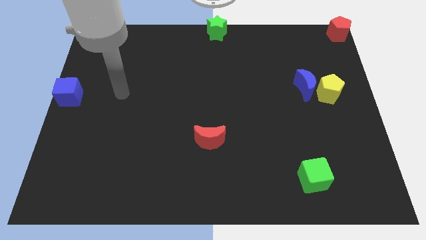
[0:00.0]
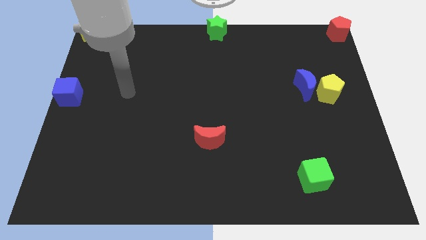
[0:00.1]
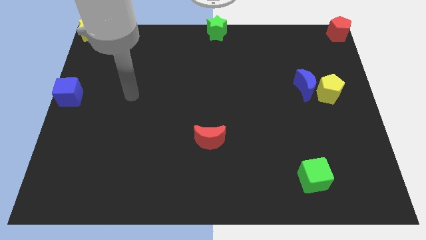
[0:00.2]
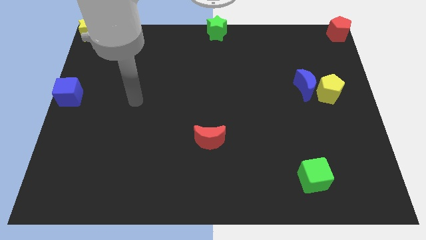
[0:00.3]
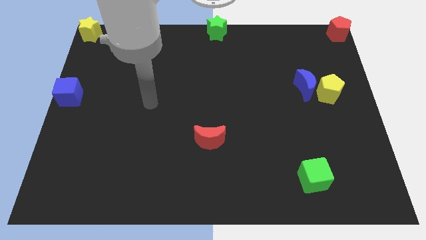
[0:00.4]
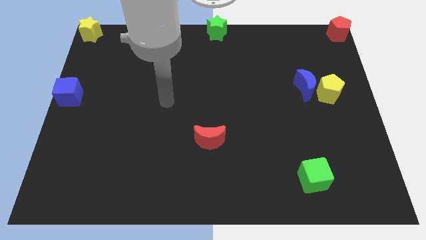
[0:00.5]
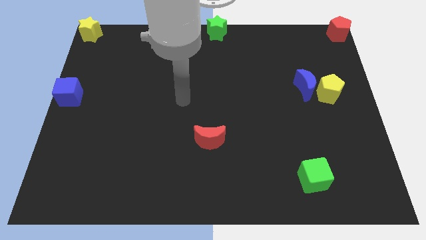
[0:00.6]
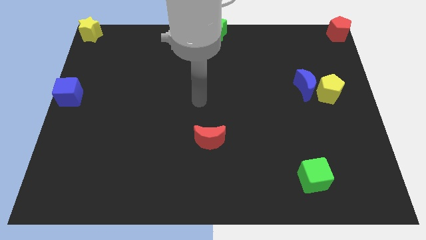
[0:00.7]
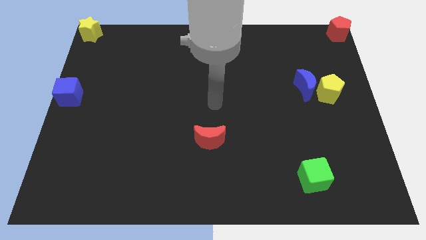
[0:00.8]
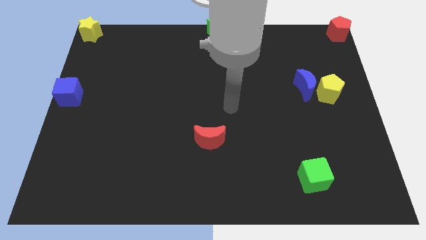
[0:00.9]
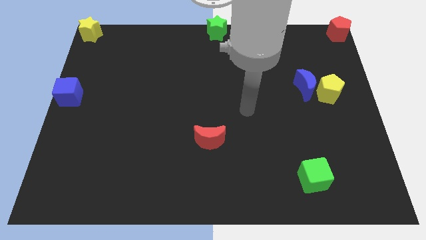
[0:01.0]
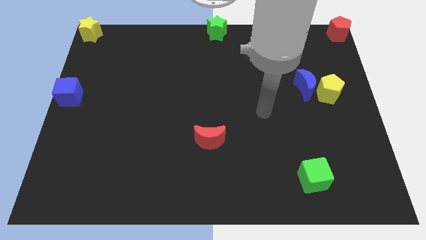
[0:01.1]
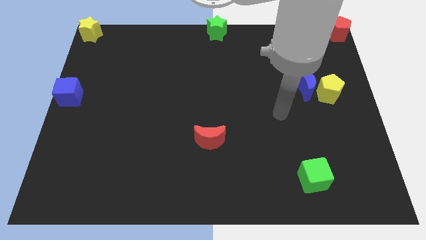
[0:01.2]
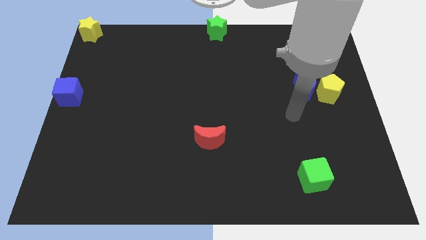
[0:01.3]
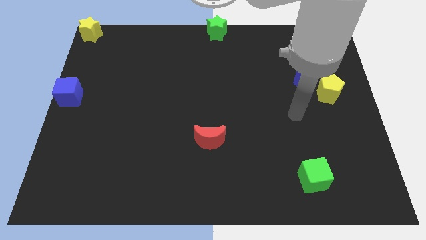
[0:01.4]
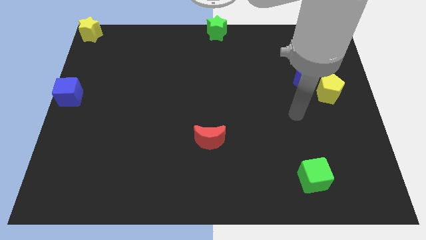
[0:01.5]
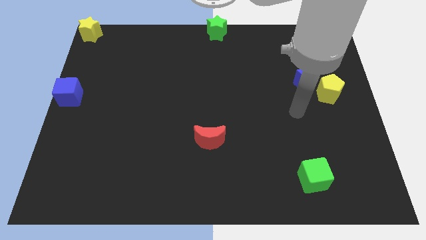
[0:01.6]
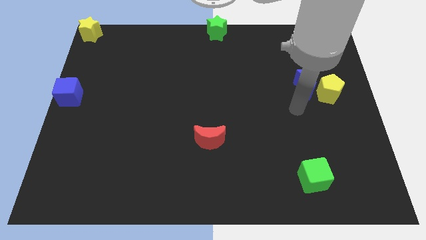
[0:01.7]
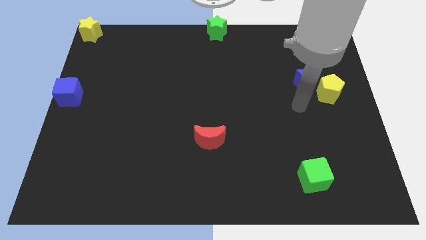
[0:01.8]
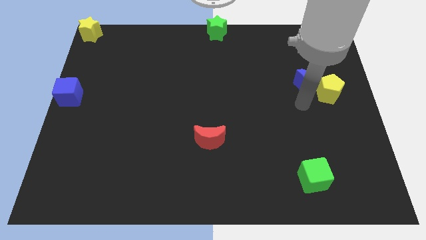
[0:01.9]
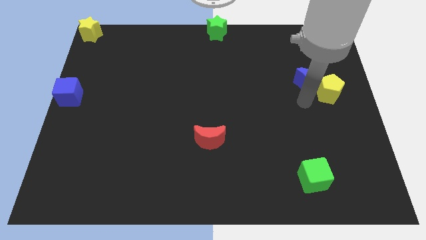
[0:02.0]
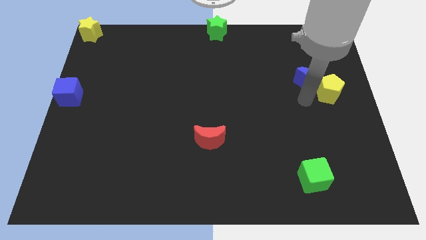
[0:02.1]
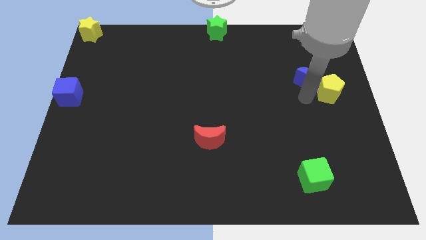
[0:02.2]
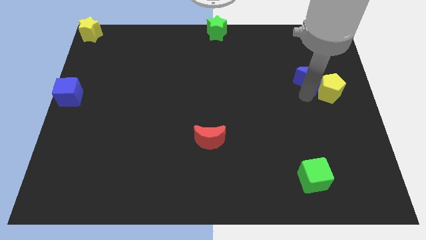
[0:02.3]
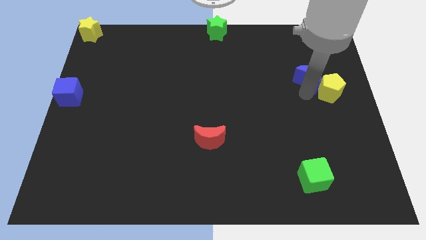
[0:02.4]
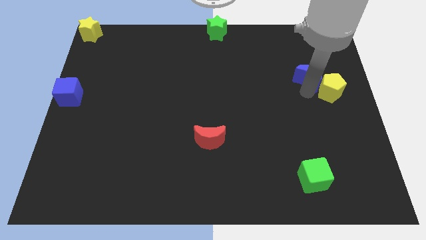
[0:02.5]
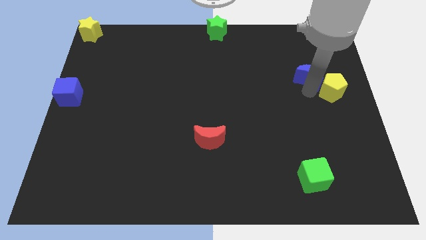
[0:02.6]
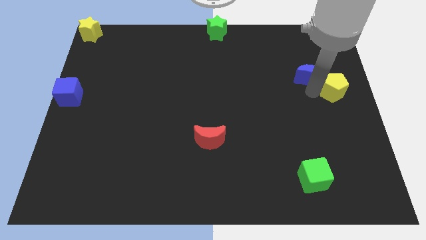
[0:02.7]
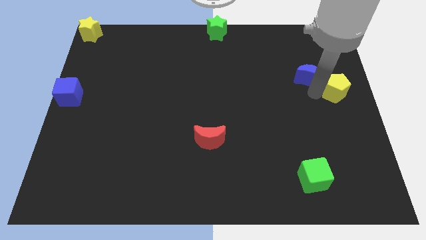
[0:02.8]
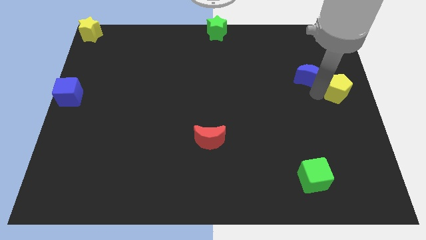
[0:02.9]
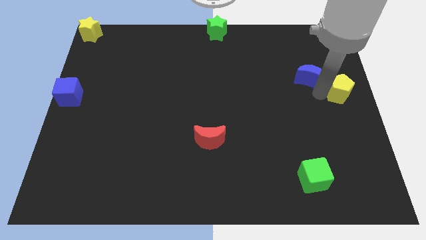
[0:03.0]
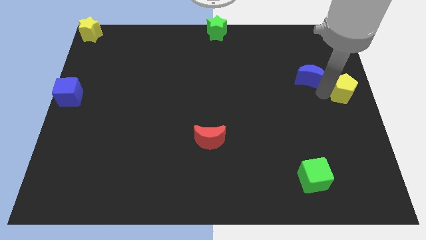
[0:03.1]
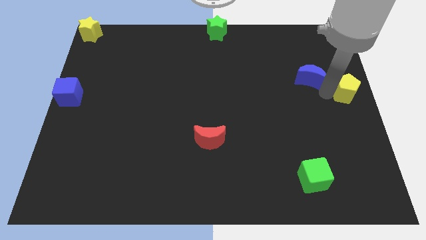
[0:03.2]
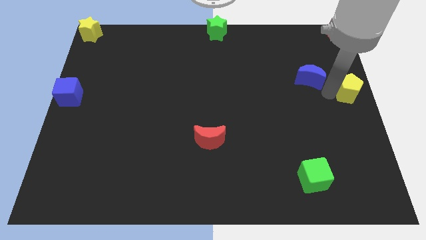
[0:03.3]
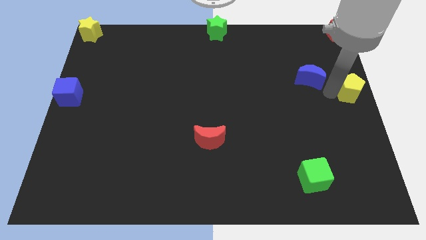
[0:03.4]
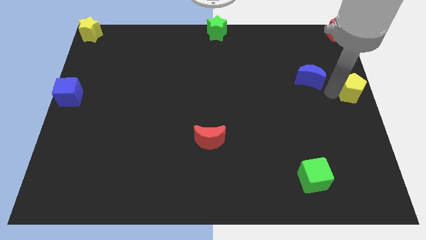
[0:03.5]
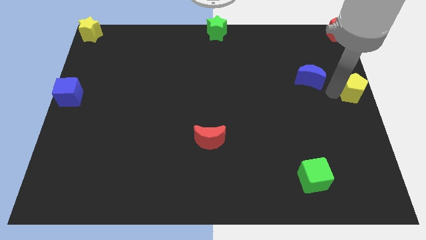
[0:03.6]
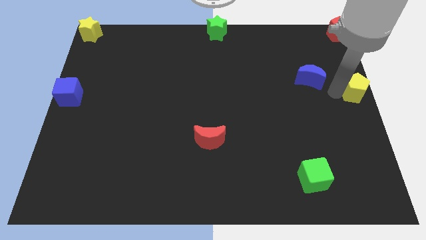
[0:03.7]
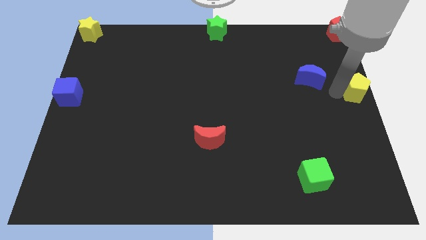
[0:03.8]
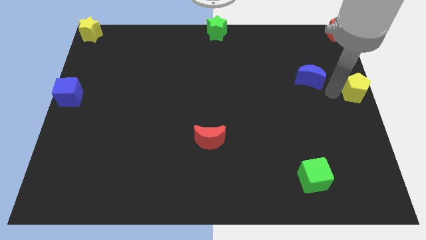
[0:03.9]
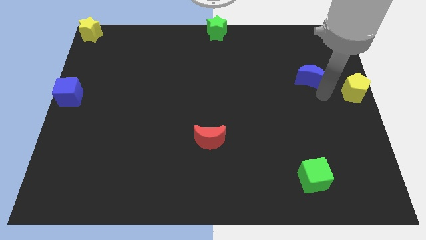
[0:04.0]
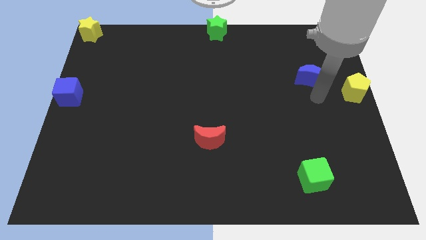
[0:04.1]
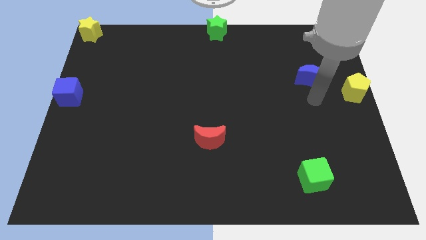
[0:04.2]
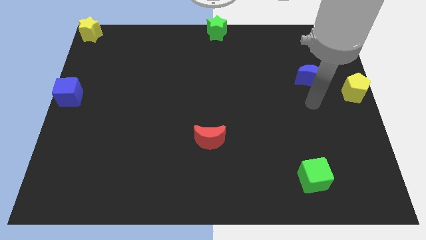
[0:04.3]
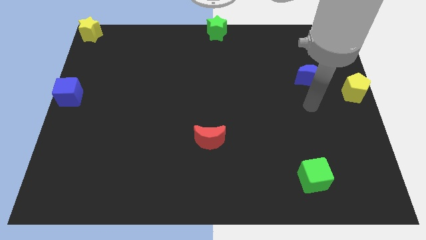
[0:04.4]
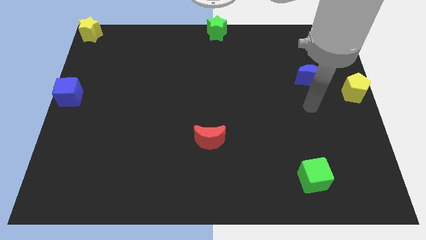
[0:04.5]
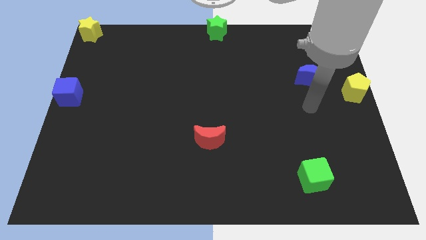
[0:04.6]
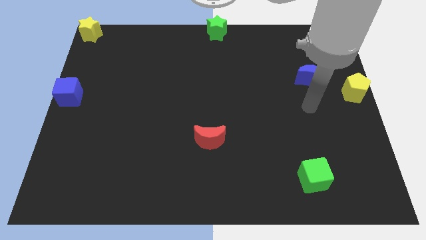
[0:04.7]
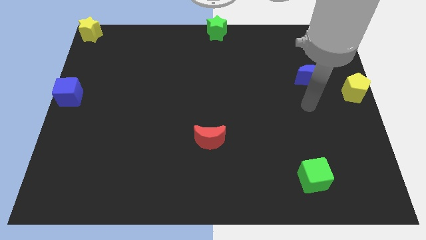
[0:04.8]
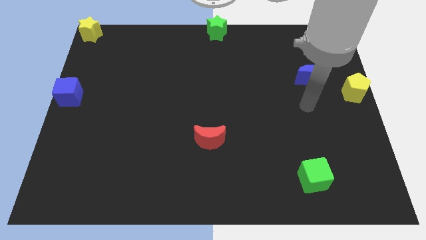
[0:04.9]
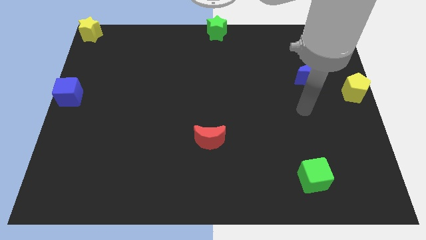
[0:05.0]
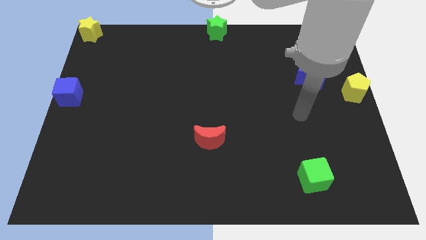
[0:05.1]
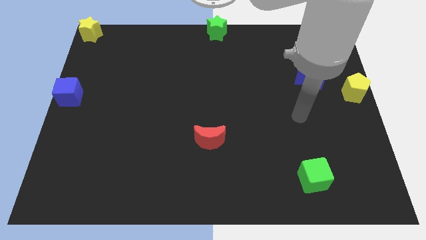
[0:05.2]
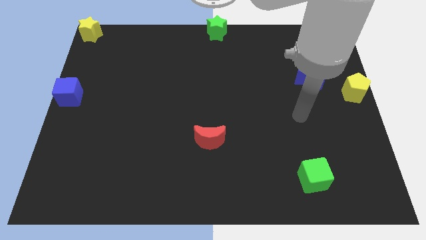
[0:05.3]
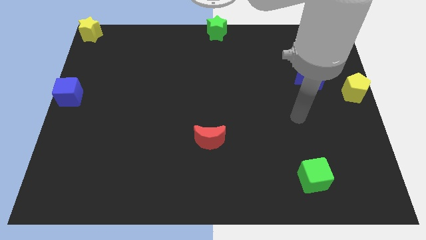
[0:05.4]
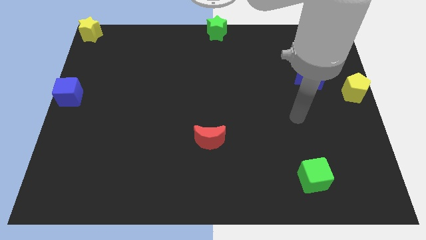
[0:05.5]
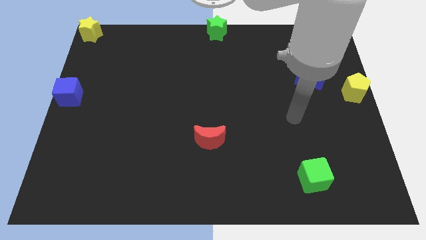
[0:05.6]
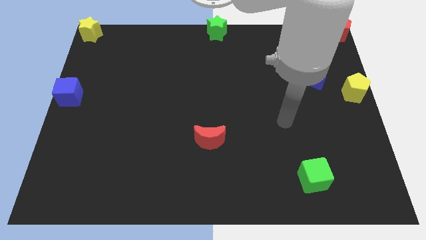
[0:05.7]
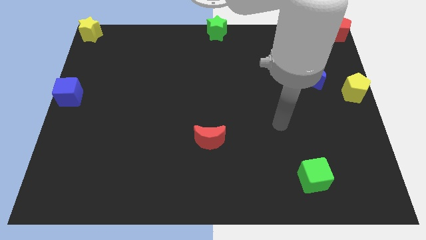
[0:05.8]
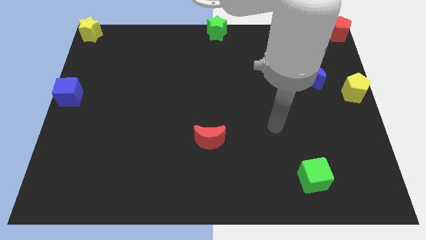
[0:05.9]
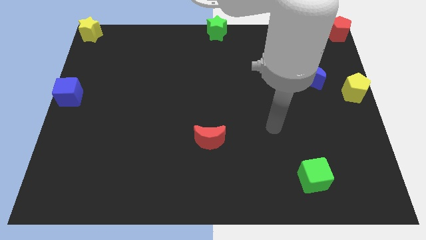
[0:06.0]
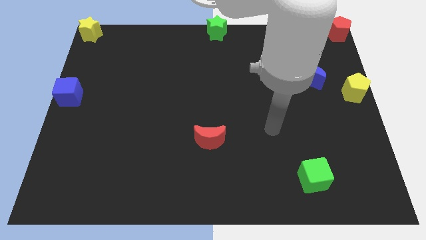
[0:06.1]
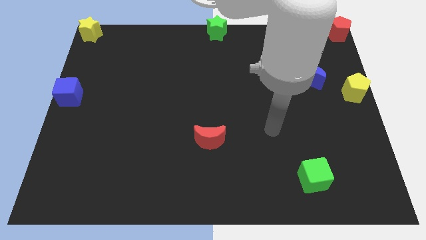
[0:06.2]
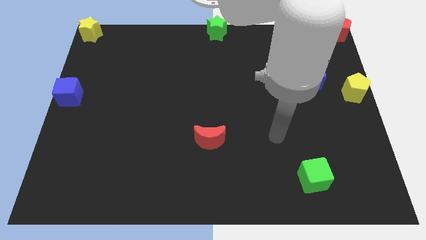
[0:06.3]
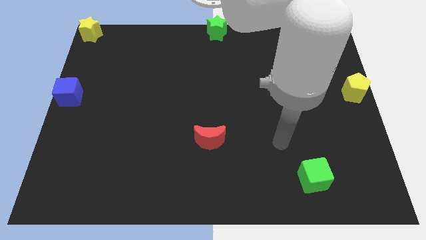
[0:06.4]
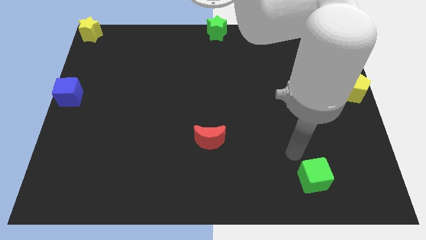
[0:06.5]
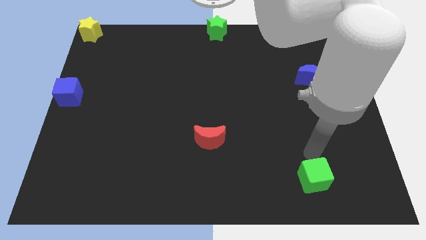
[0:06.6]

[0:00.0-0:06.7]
separate blue moon from yellow pentagon

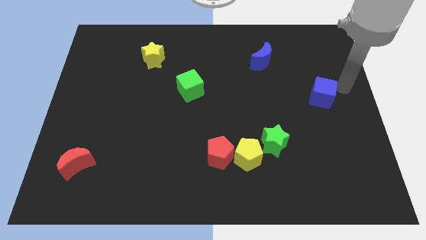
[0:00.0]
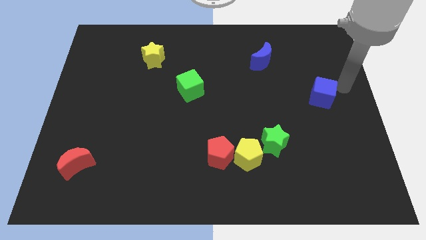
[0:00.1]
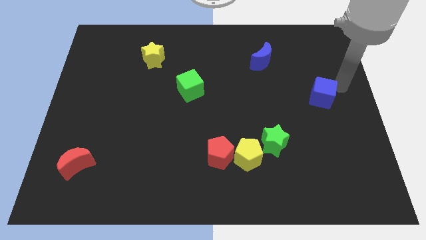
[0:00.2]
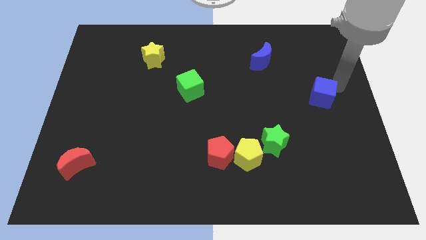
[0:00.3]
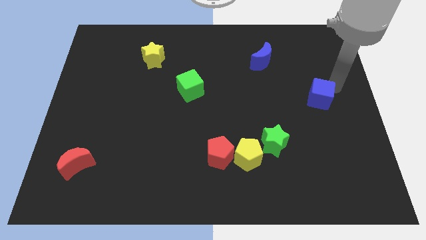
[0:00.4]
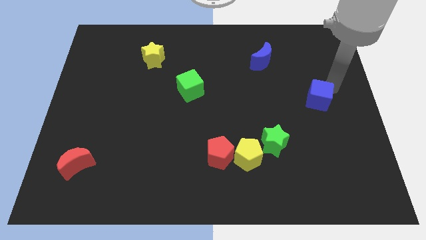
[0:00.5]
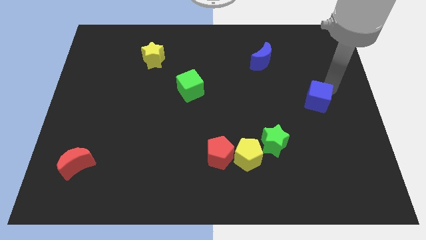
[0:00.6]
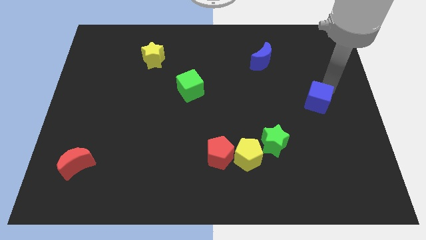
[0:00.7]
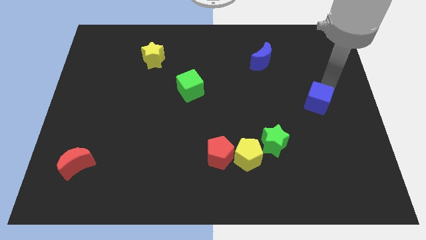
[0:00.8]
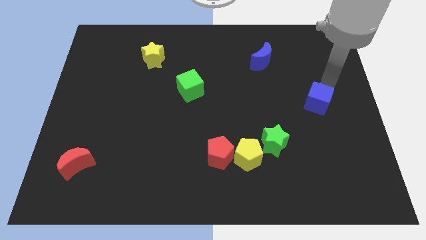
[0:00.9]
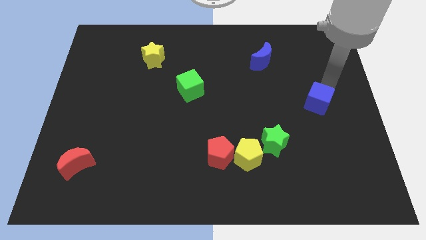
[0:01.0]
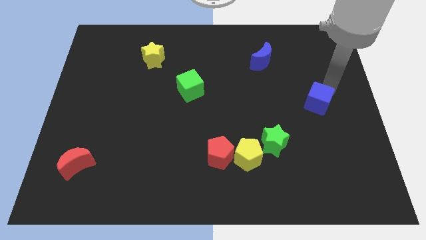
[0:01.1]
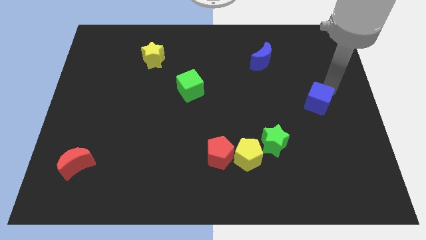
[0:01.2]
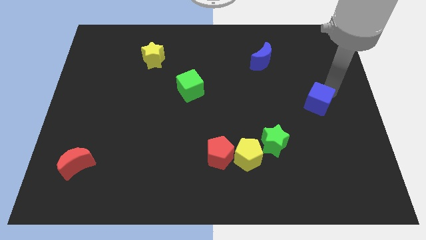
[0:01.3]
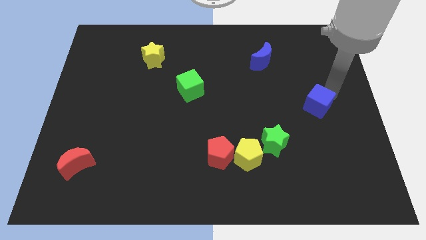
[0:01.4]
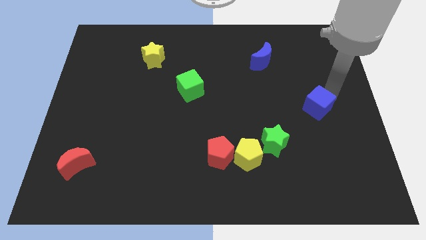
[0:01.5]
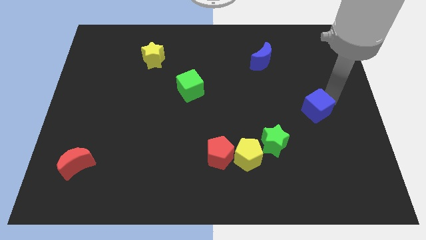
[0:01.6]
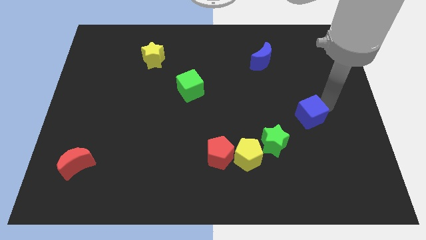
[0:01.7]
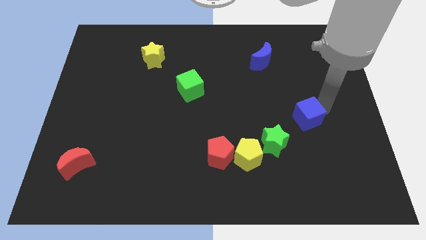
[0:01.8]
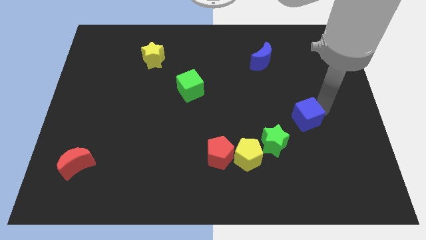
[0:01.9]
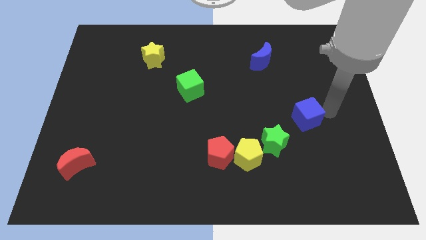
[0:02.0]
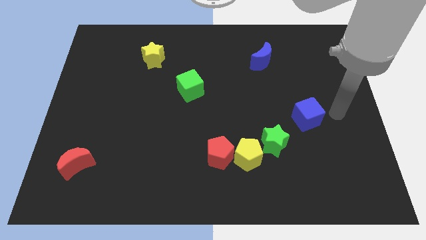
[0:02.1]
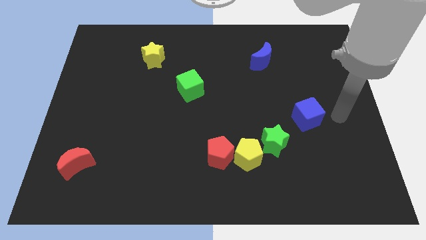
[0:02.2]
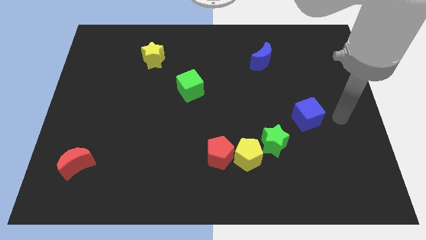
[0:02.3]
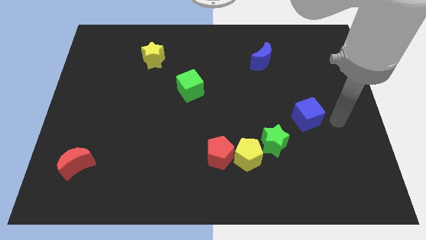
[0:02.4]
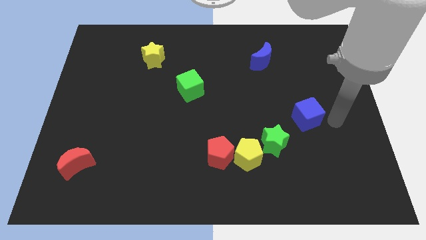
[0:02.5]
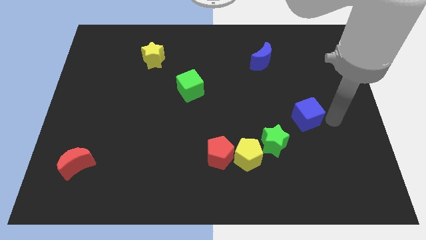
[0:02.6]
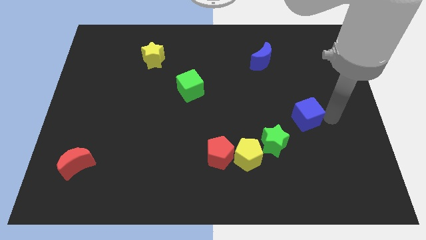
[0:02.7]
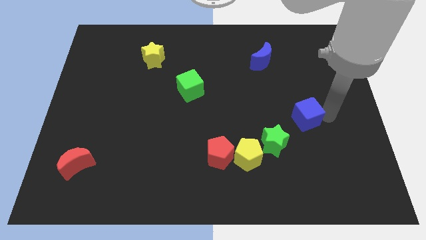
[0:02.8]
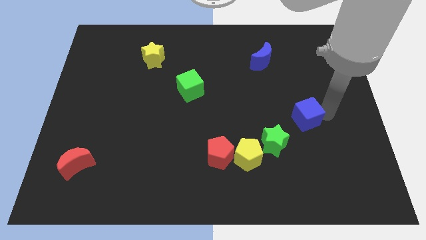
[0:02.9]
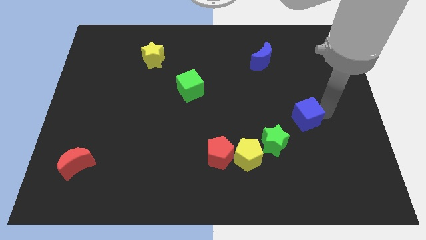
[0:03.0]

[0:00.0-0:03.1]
move the blue cube diagonally right to the green star
